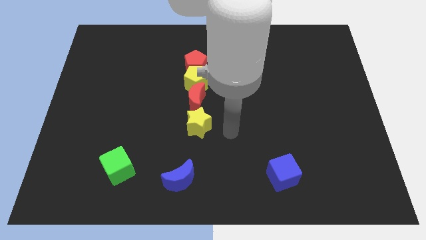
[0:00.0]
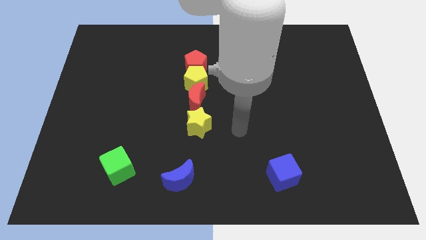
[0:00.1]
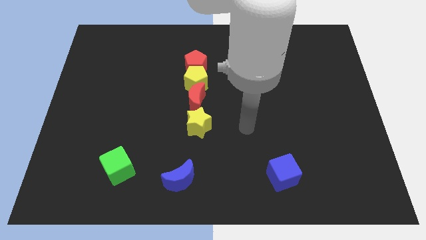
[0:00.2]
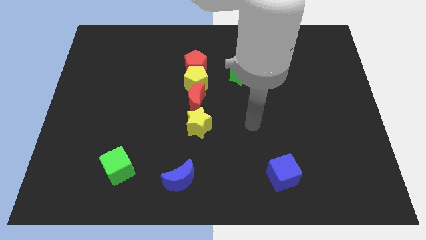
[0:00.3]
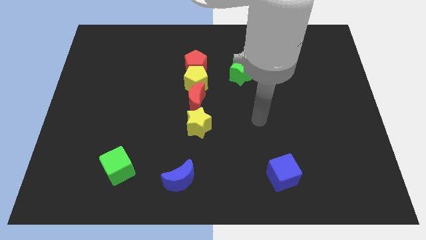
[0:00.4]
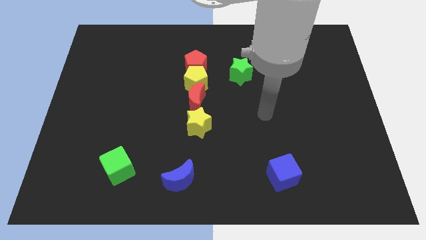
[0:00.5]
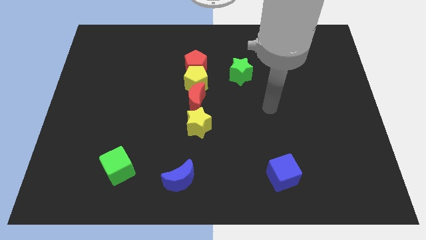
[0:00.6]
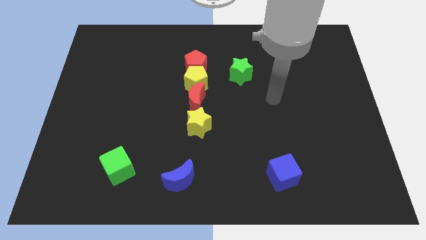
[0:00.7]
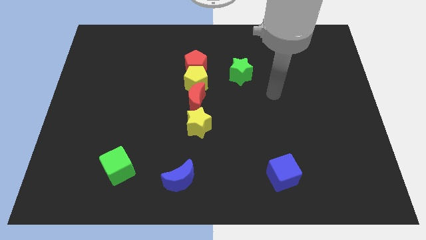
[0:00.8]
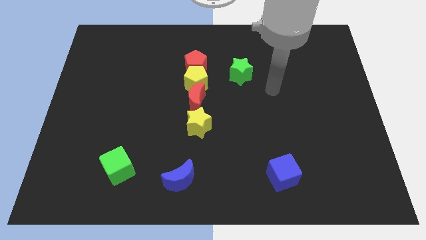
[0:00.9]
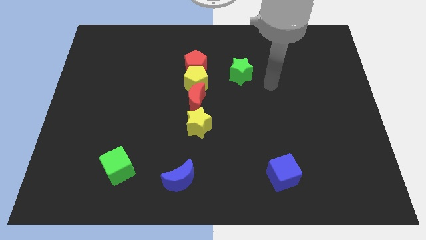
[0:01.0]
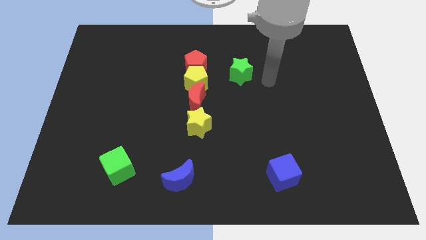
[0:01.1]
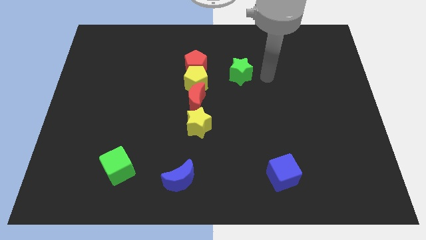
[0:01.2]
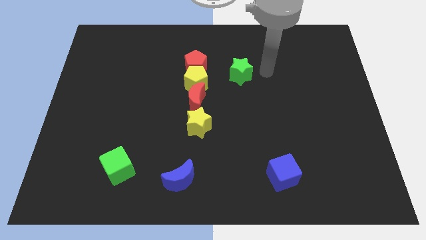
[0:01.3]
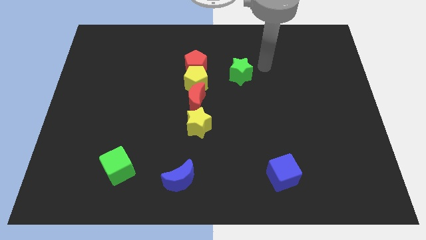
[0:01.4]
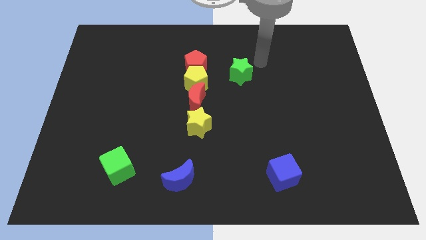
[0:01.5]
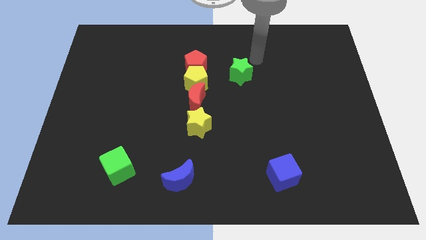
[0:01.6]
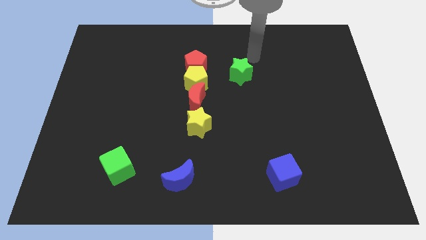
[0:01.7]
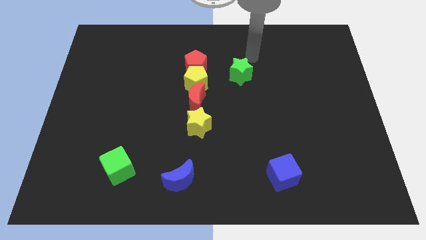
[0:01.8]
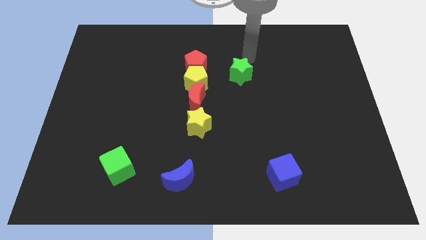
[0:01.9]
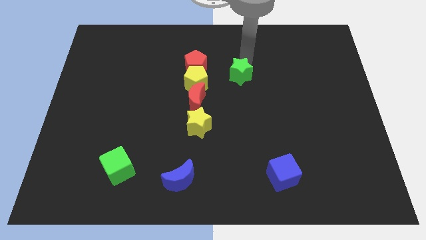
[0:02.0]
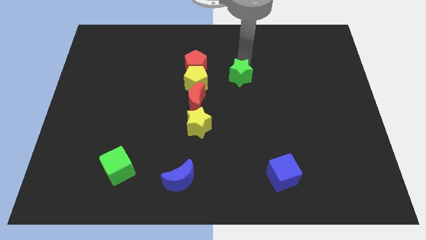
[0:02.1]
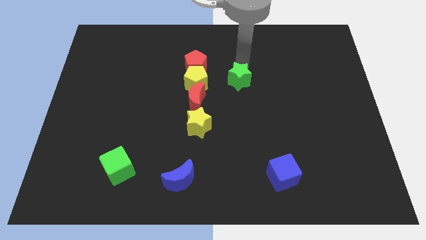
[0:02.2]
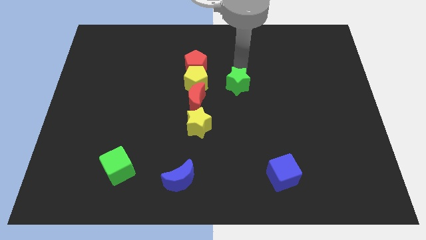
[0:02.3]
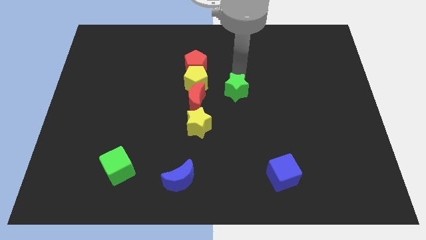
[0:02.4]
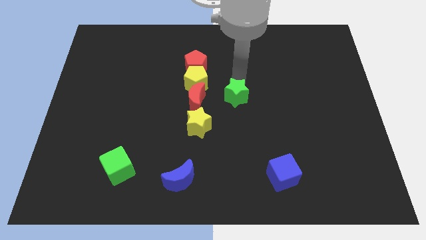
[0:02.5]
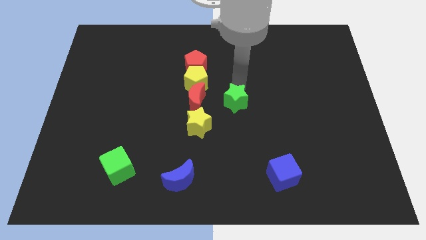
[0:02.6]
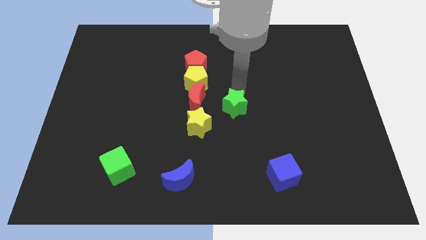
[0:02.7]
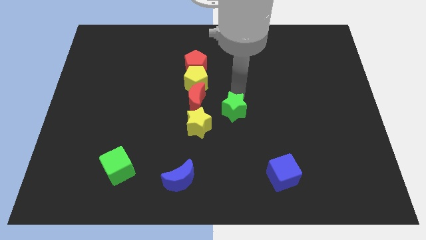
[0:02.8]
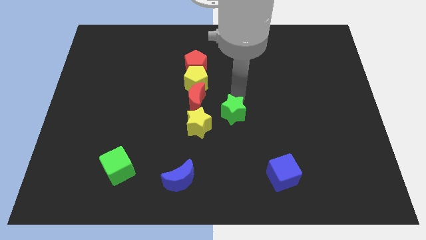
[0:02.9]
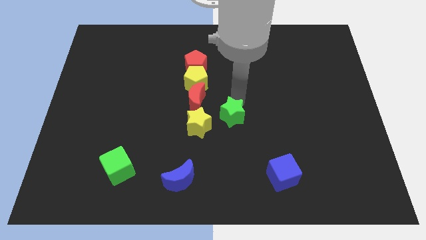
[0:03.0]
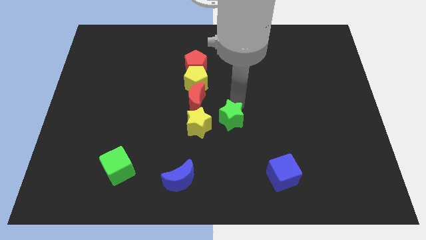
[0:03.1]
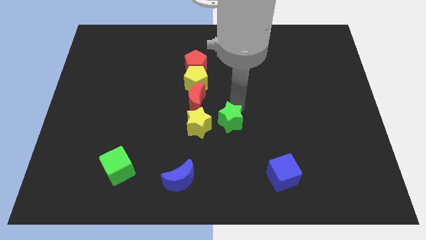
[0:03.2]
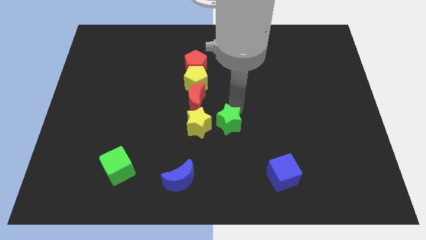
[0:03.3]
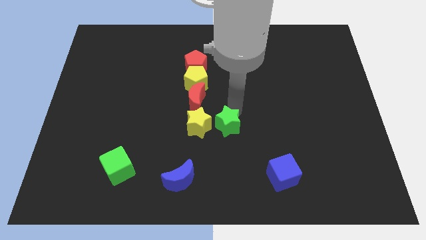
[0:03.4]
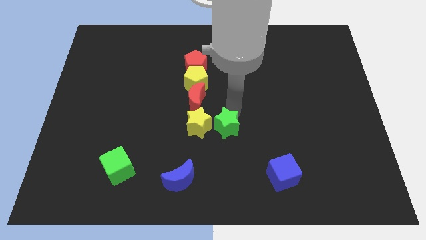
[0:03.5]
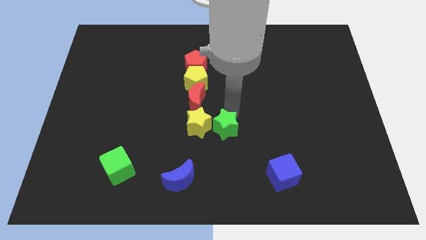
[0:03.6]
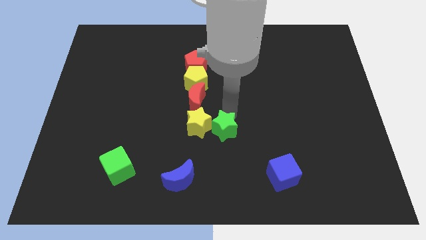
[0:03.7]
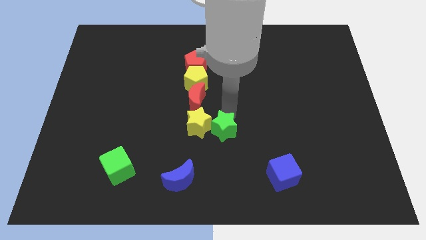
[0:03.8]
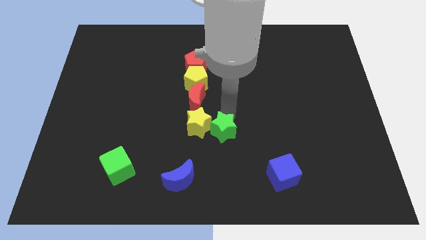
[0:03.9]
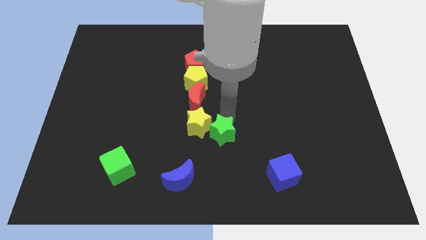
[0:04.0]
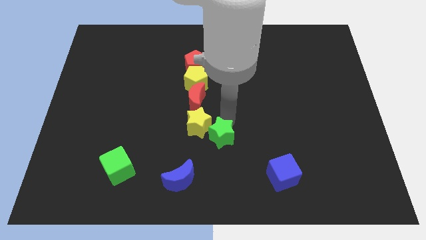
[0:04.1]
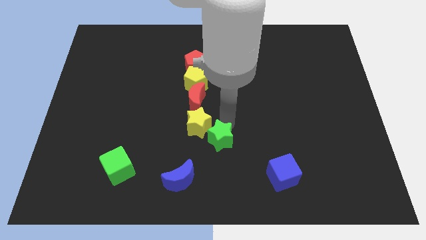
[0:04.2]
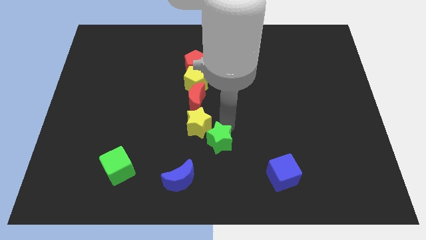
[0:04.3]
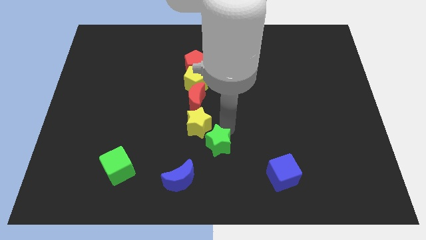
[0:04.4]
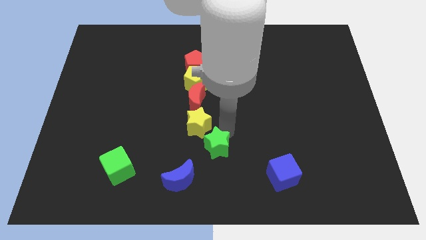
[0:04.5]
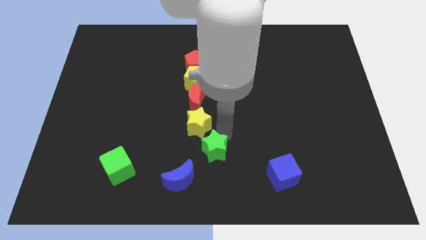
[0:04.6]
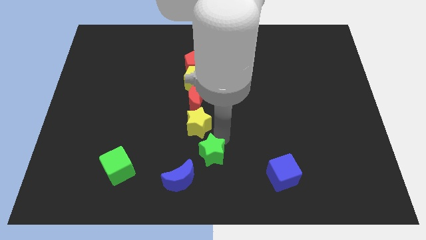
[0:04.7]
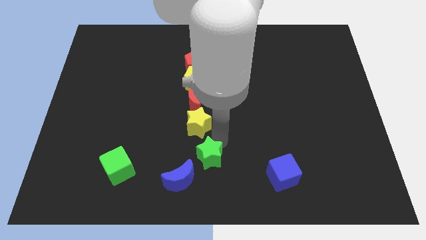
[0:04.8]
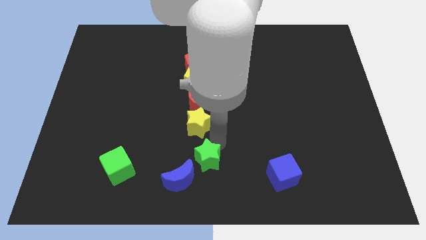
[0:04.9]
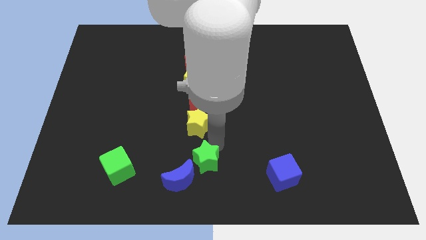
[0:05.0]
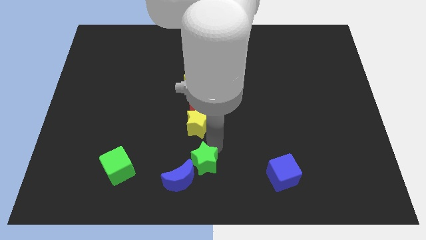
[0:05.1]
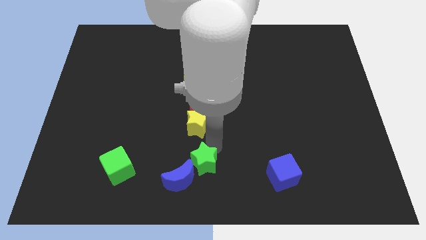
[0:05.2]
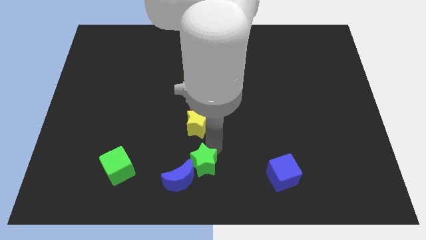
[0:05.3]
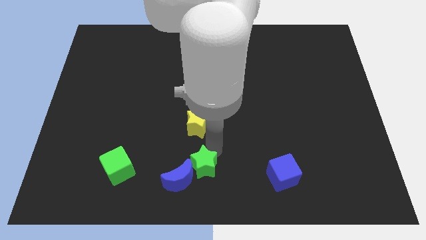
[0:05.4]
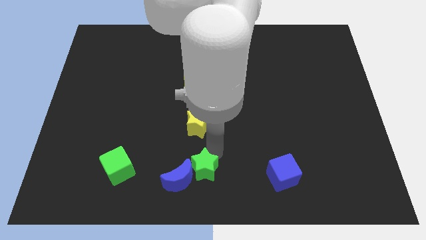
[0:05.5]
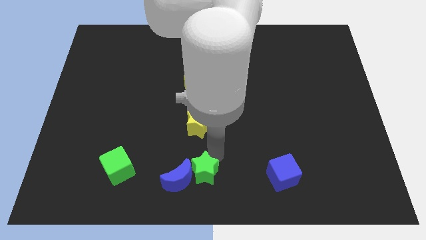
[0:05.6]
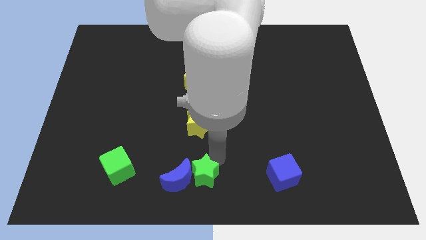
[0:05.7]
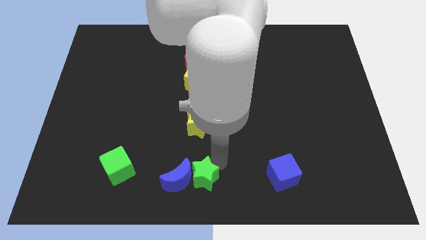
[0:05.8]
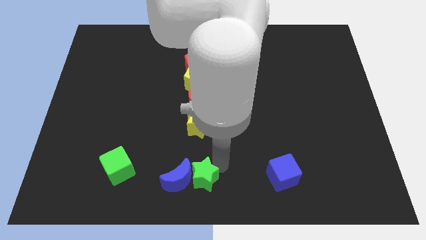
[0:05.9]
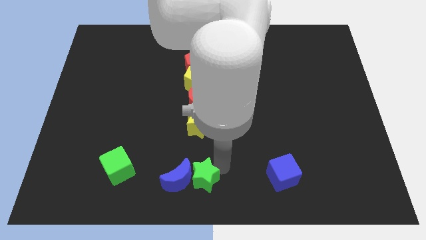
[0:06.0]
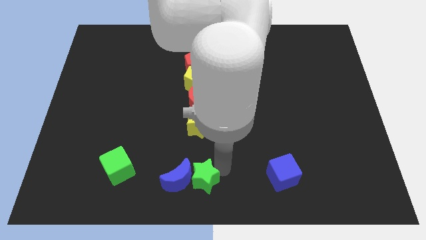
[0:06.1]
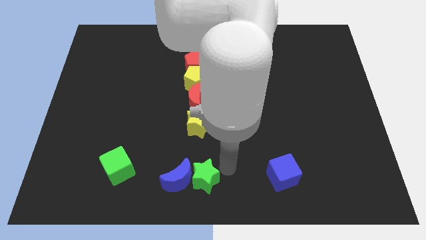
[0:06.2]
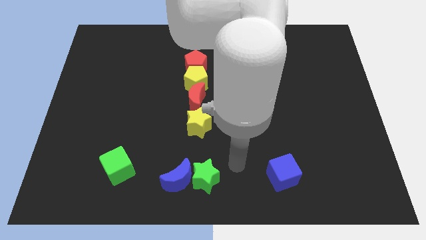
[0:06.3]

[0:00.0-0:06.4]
move the green star towards the blue crescent

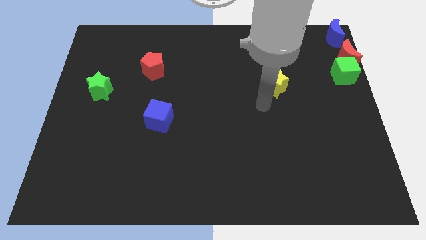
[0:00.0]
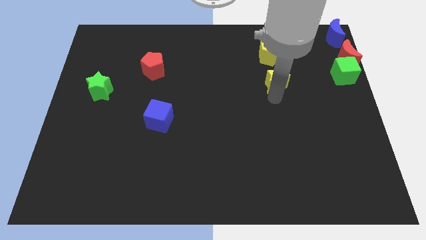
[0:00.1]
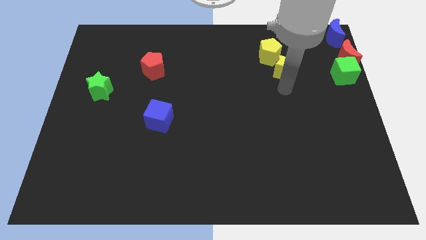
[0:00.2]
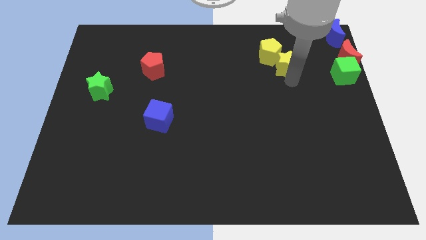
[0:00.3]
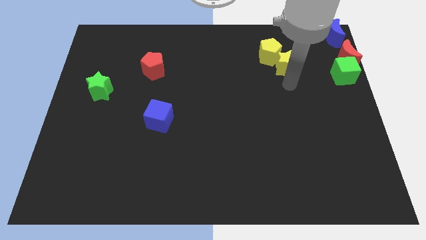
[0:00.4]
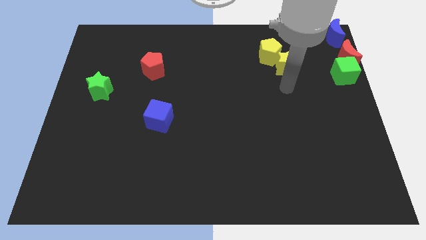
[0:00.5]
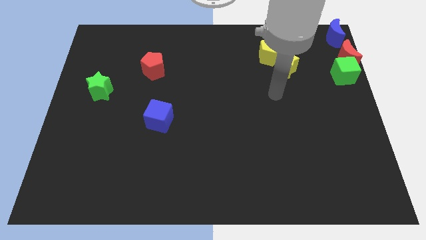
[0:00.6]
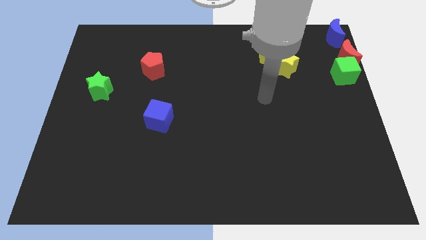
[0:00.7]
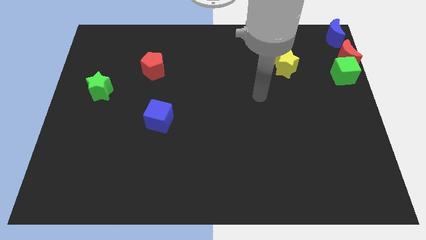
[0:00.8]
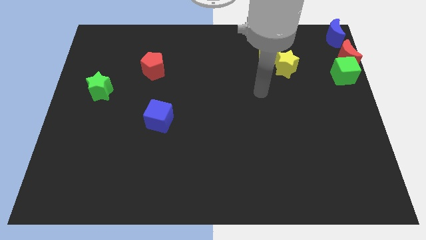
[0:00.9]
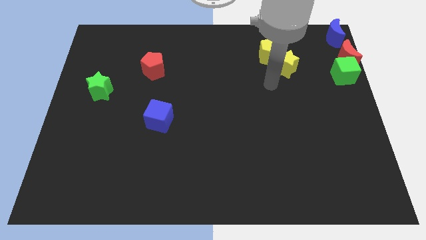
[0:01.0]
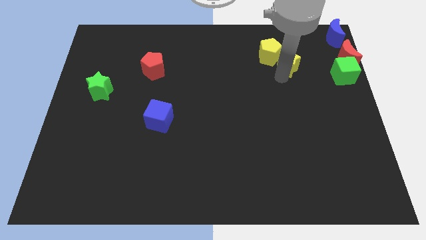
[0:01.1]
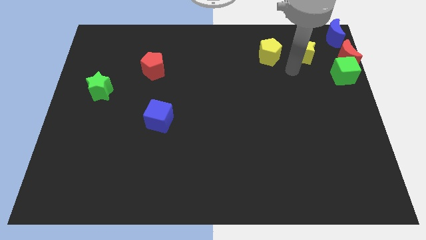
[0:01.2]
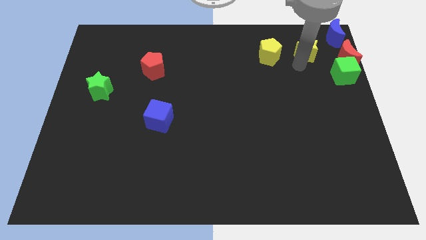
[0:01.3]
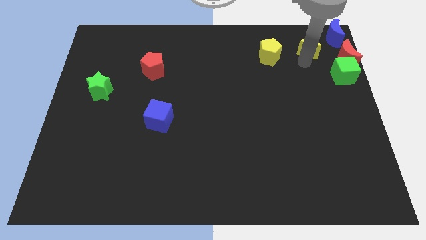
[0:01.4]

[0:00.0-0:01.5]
place the yellow star right to the yellow pentagon

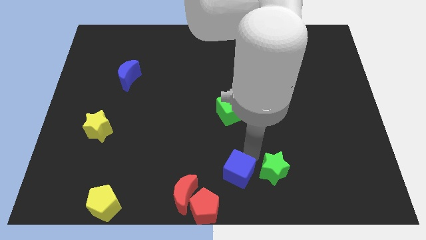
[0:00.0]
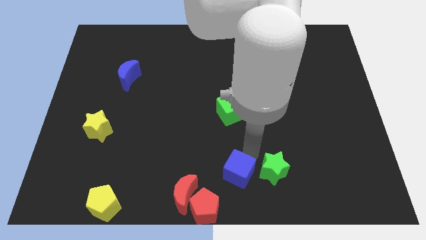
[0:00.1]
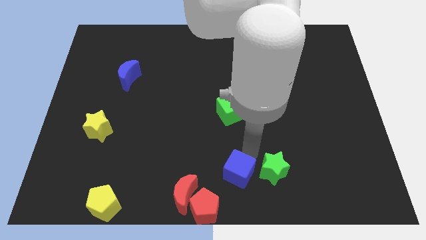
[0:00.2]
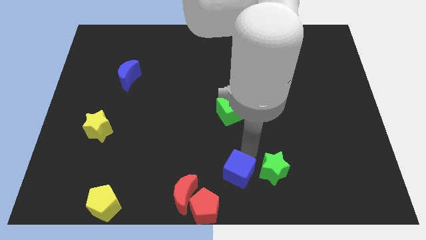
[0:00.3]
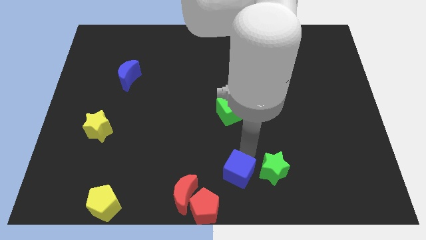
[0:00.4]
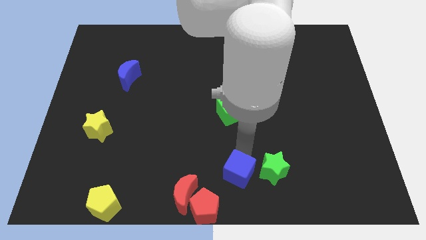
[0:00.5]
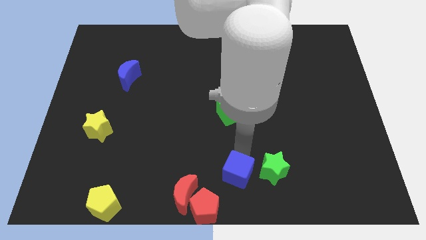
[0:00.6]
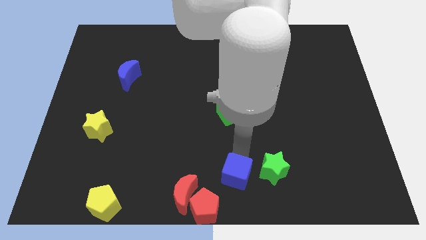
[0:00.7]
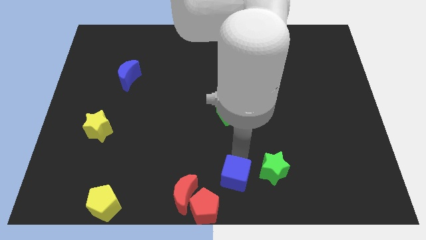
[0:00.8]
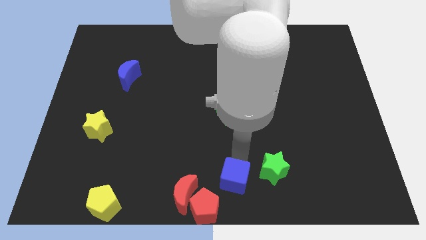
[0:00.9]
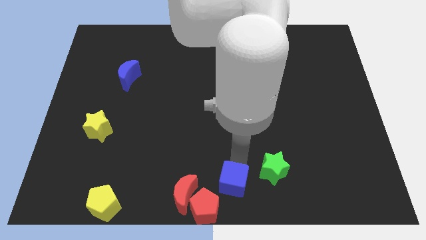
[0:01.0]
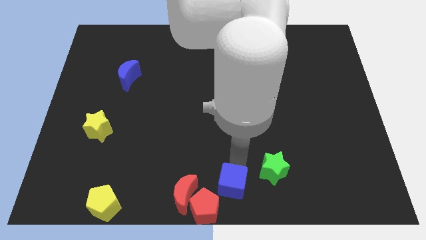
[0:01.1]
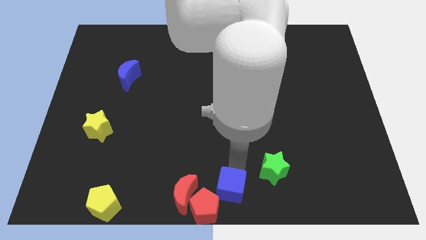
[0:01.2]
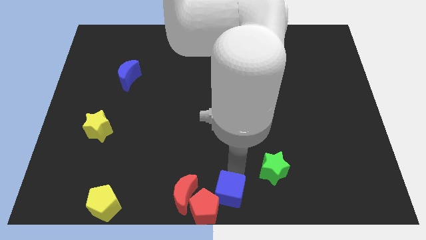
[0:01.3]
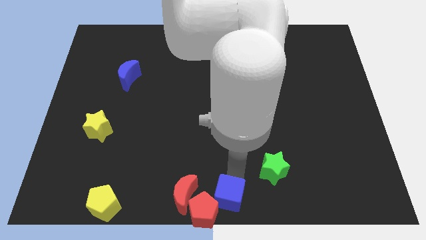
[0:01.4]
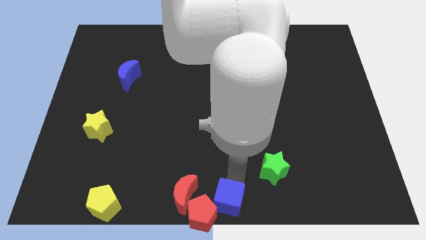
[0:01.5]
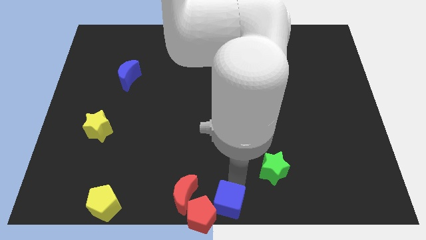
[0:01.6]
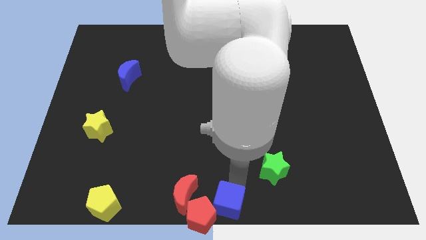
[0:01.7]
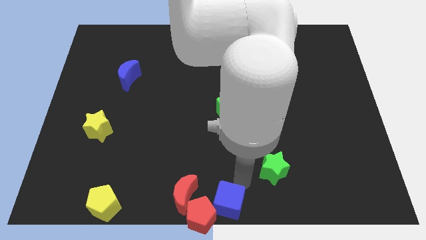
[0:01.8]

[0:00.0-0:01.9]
push the blue cube into the red pentagon
